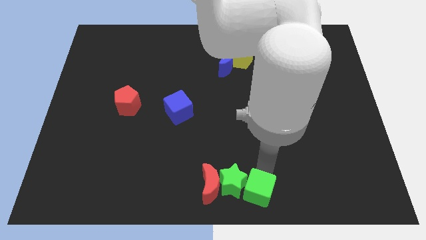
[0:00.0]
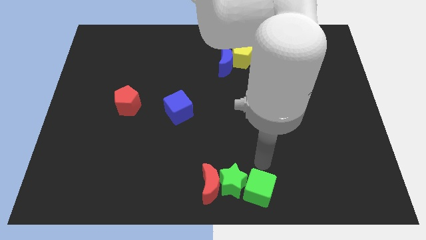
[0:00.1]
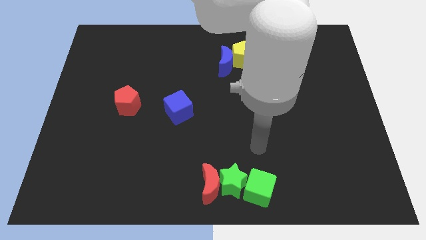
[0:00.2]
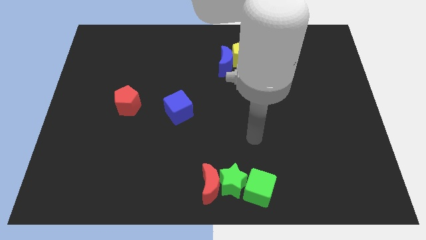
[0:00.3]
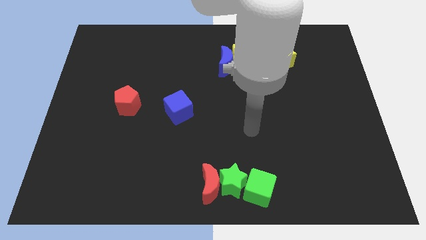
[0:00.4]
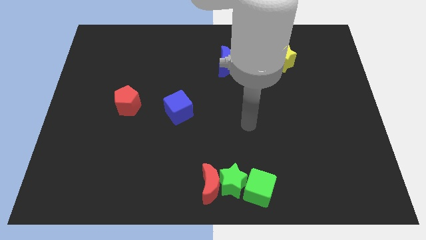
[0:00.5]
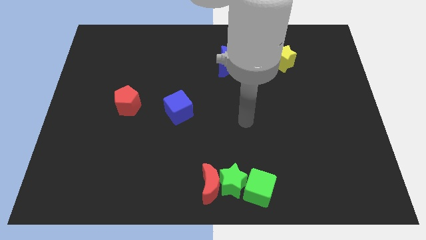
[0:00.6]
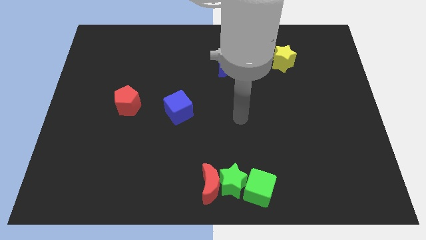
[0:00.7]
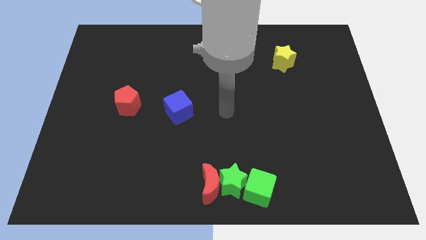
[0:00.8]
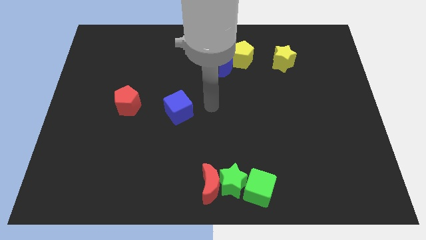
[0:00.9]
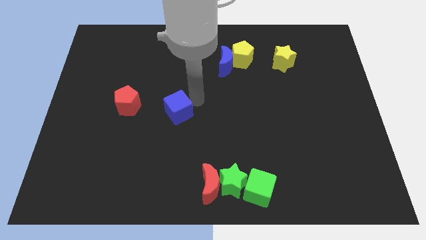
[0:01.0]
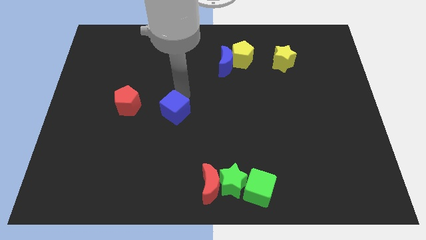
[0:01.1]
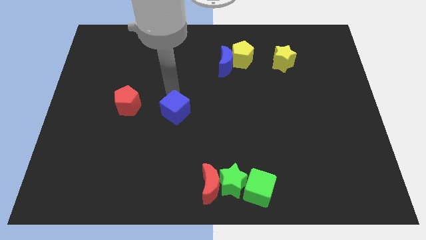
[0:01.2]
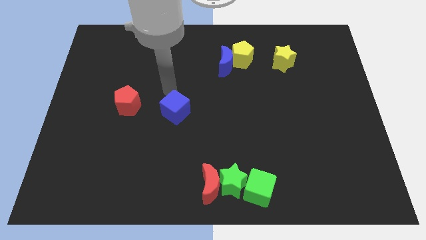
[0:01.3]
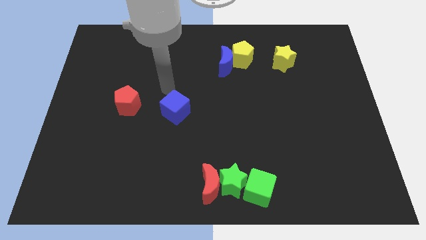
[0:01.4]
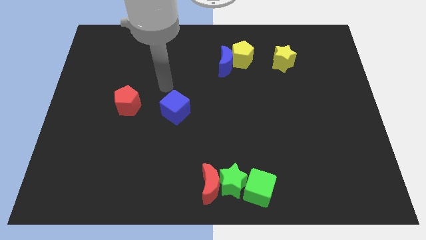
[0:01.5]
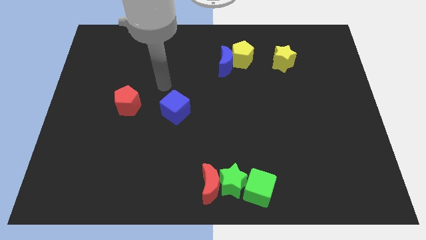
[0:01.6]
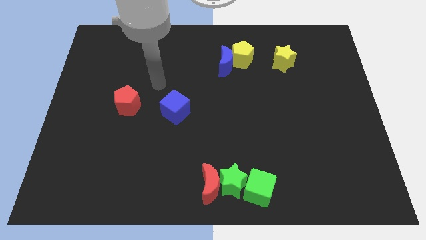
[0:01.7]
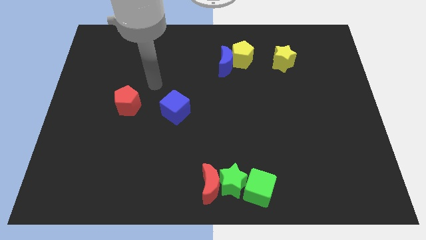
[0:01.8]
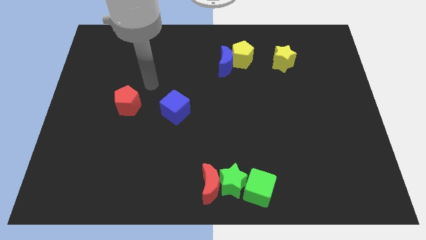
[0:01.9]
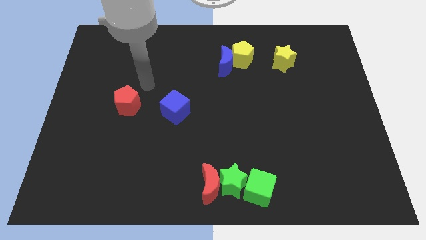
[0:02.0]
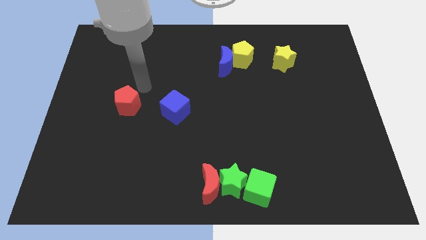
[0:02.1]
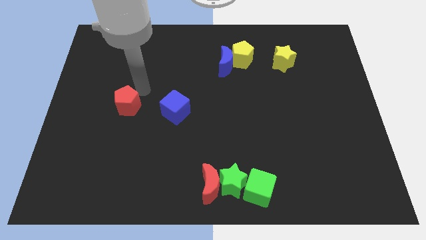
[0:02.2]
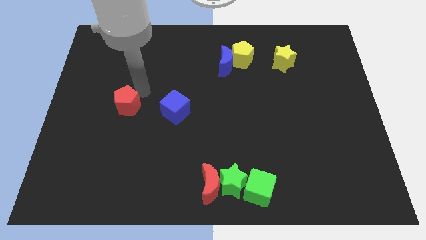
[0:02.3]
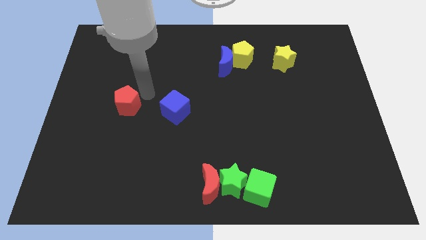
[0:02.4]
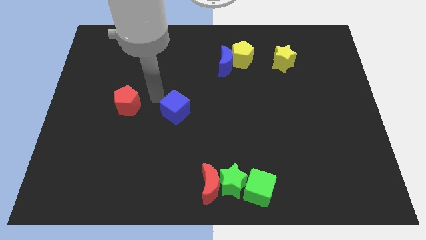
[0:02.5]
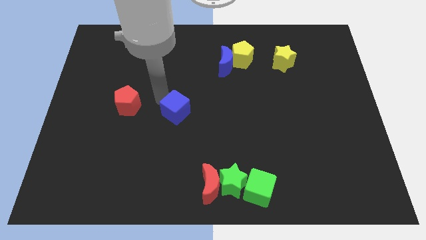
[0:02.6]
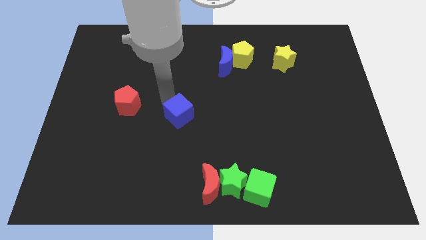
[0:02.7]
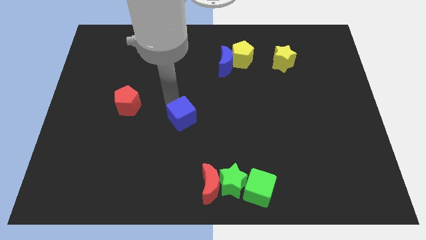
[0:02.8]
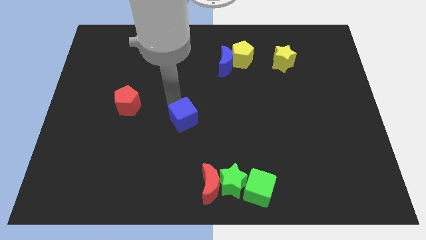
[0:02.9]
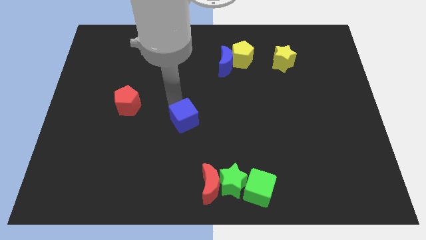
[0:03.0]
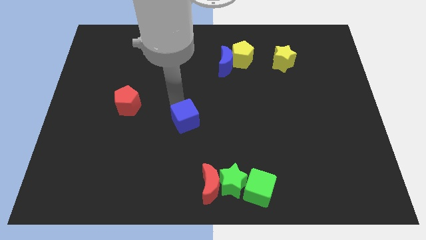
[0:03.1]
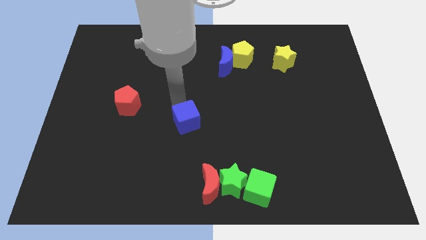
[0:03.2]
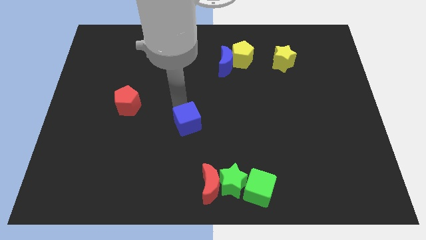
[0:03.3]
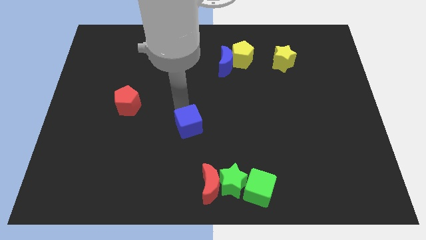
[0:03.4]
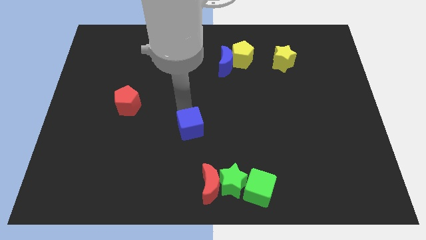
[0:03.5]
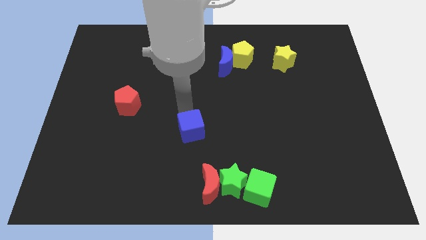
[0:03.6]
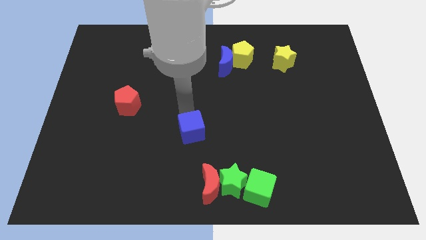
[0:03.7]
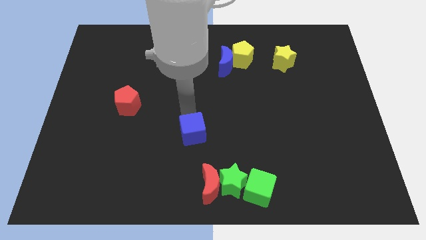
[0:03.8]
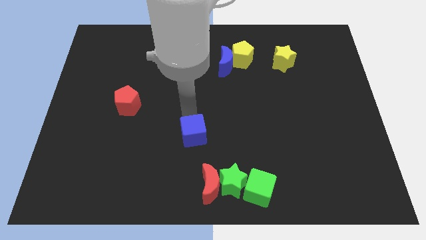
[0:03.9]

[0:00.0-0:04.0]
push the blue cube towards the group of blocks

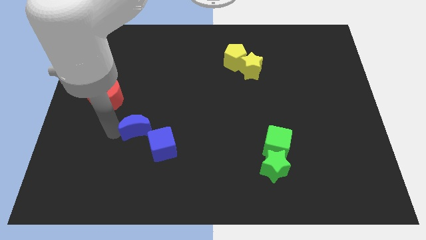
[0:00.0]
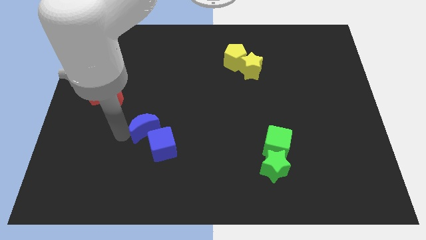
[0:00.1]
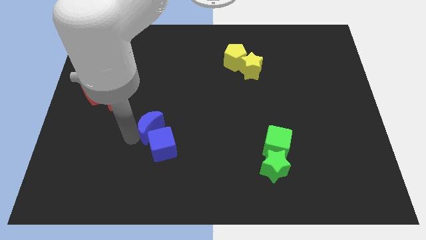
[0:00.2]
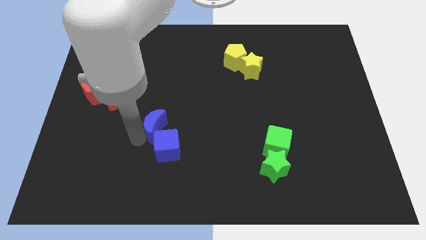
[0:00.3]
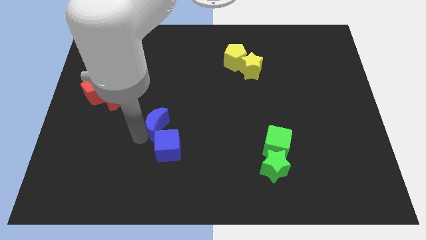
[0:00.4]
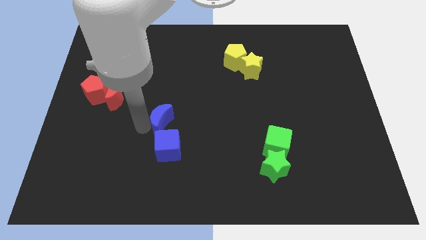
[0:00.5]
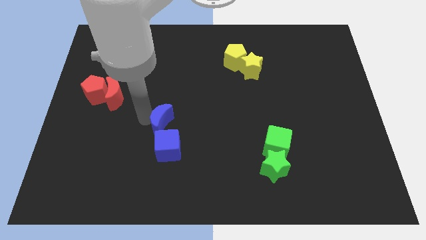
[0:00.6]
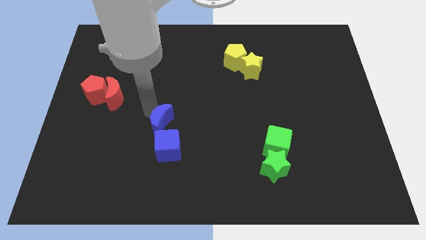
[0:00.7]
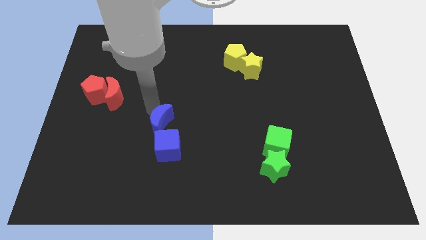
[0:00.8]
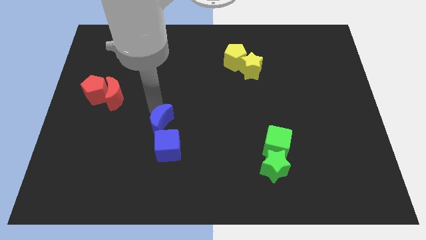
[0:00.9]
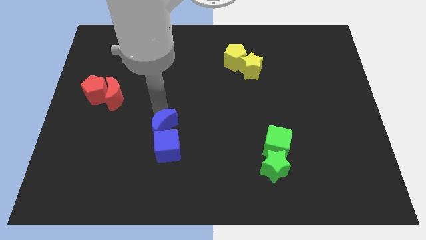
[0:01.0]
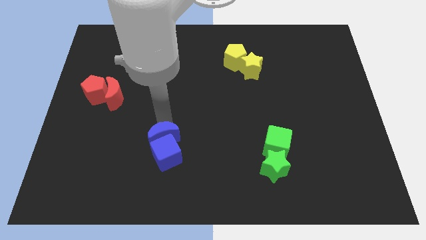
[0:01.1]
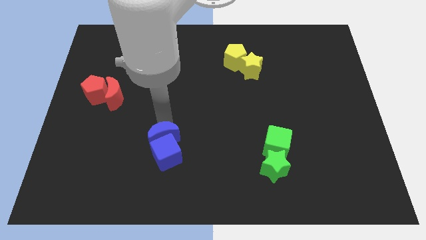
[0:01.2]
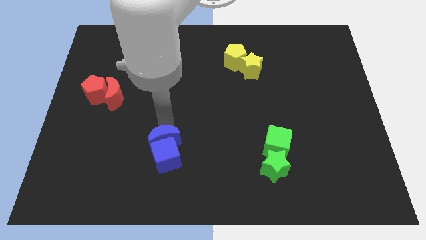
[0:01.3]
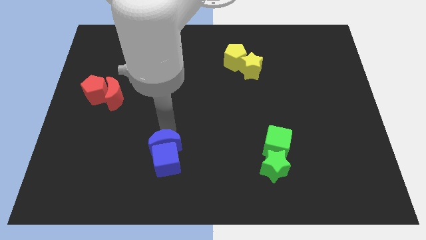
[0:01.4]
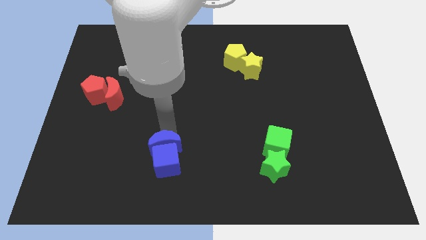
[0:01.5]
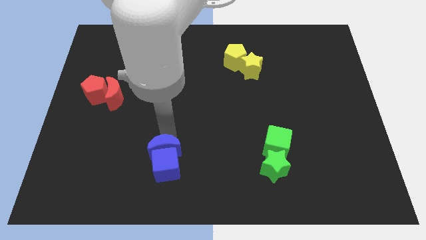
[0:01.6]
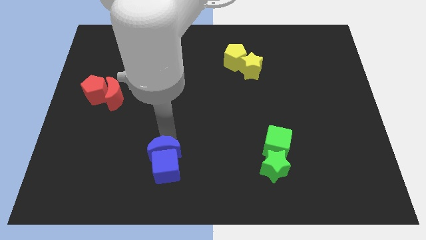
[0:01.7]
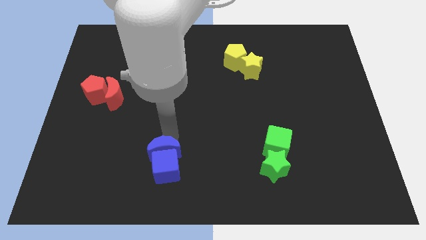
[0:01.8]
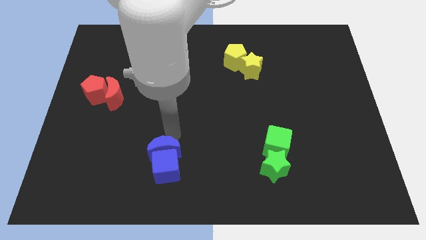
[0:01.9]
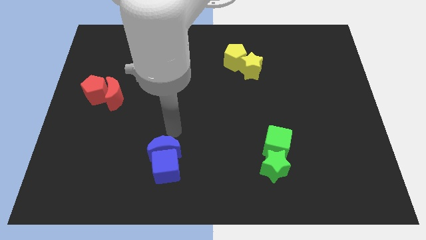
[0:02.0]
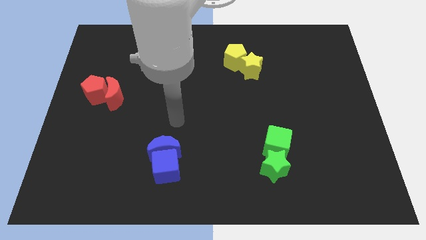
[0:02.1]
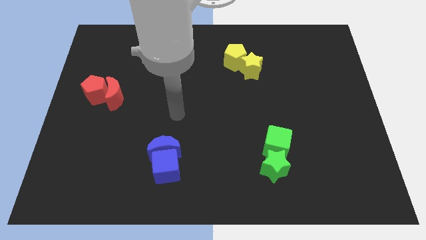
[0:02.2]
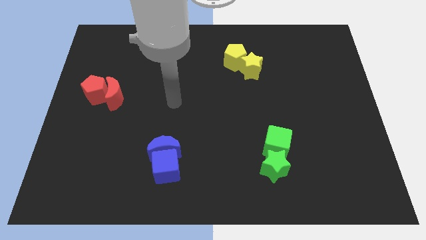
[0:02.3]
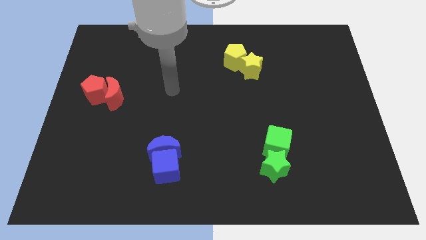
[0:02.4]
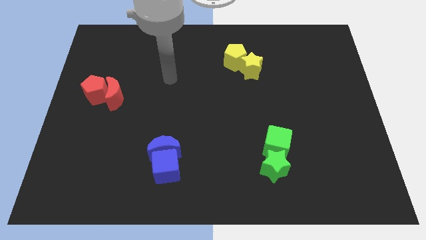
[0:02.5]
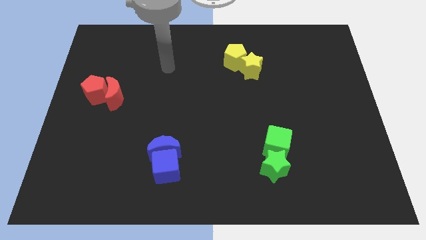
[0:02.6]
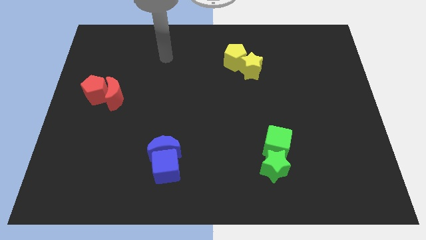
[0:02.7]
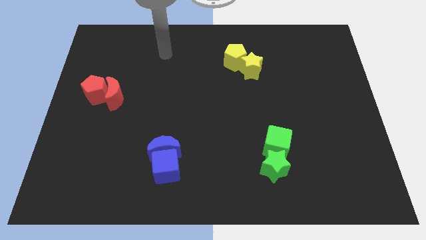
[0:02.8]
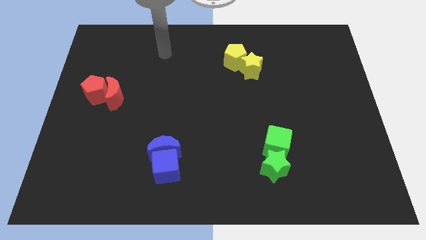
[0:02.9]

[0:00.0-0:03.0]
move your arm towards the top of the board

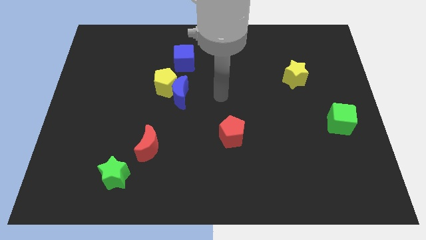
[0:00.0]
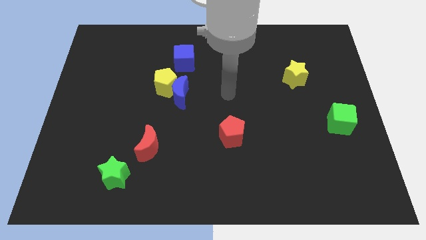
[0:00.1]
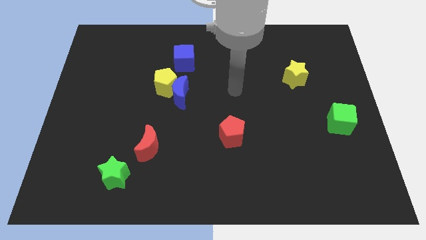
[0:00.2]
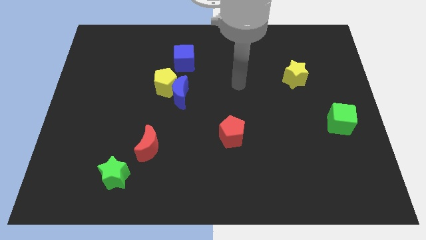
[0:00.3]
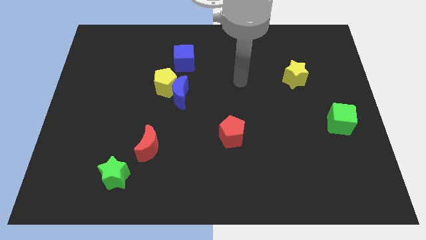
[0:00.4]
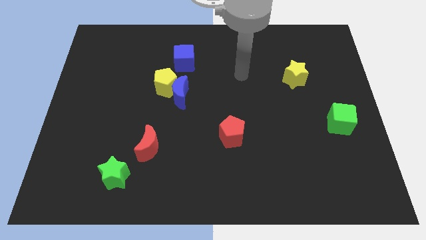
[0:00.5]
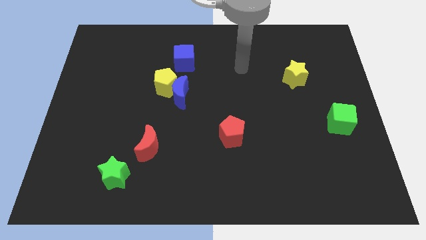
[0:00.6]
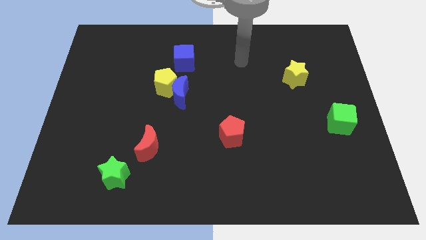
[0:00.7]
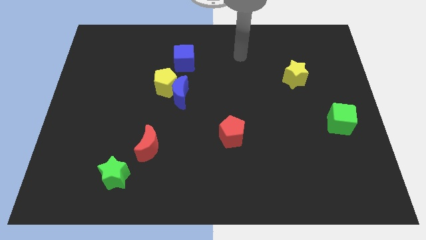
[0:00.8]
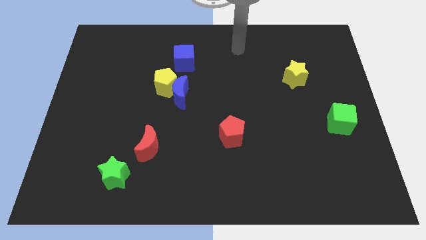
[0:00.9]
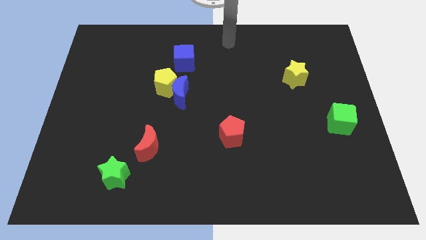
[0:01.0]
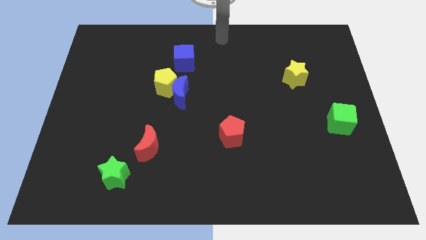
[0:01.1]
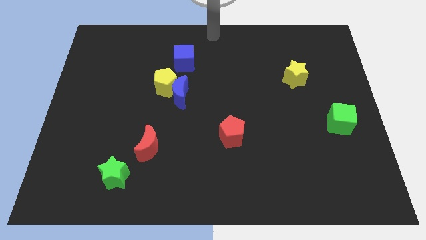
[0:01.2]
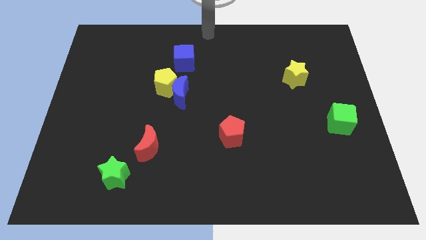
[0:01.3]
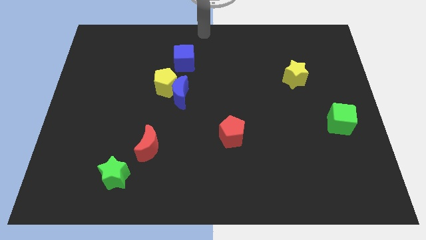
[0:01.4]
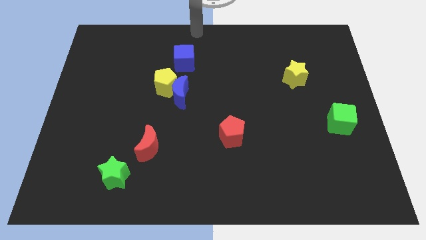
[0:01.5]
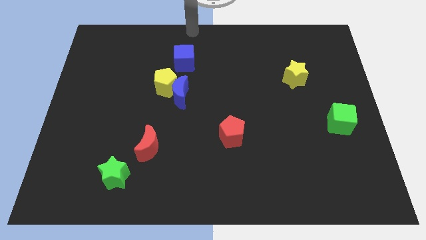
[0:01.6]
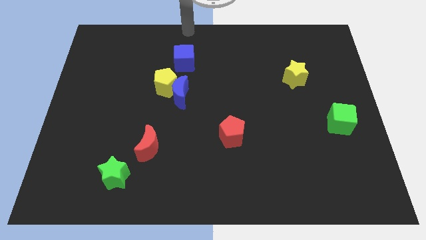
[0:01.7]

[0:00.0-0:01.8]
move your arm to the top center of the board

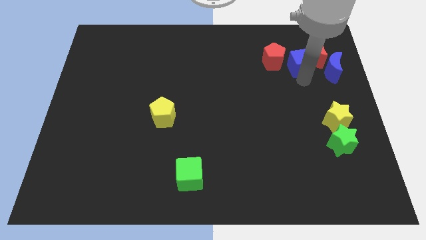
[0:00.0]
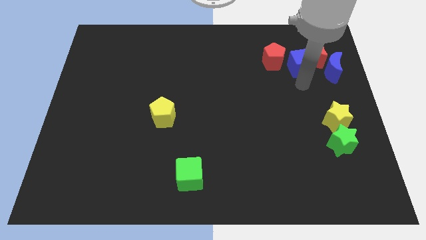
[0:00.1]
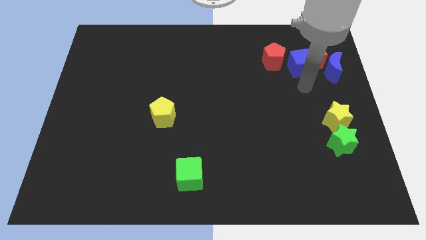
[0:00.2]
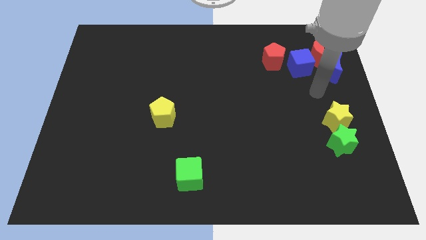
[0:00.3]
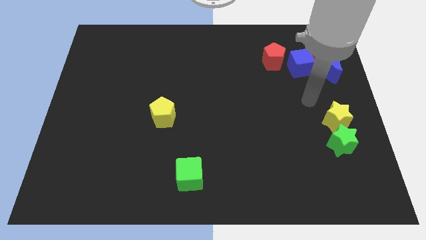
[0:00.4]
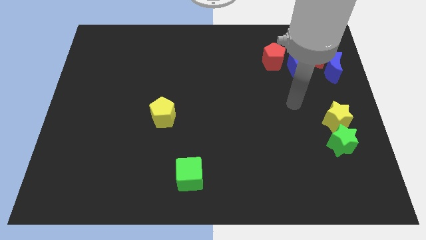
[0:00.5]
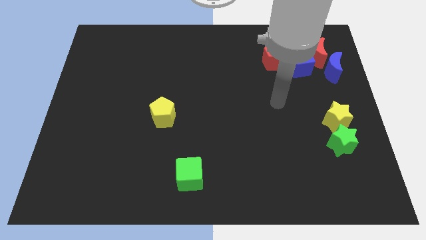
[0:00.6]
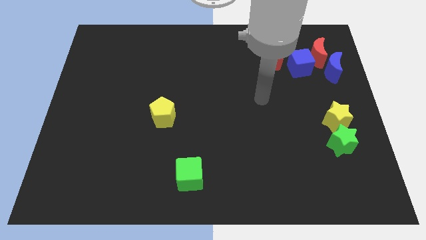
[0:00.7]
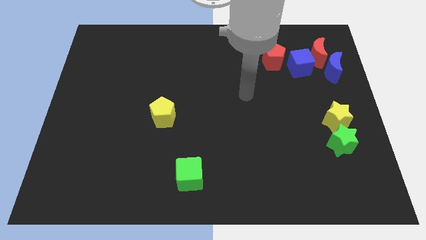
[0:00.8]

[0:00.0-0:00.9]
drag your arm towards center
